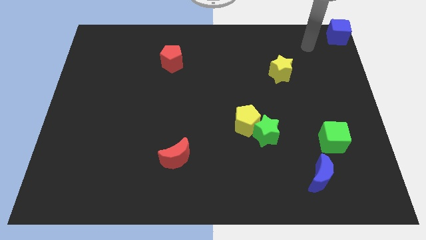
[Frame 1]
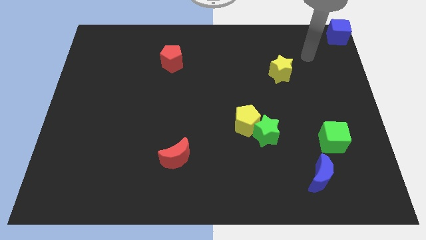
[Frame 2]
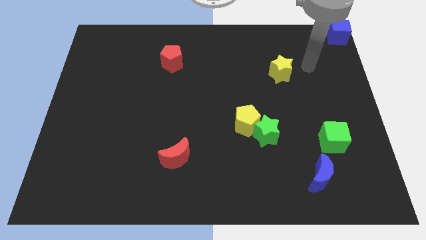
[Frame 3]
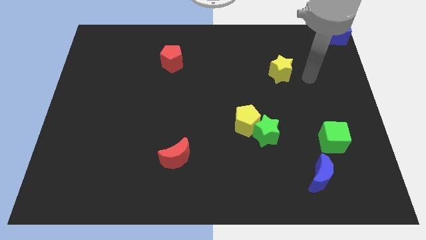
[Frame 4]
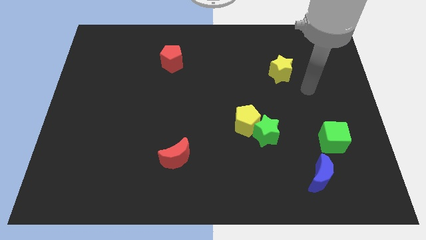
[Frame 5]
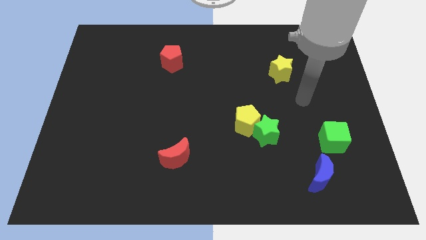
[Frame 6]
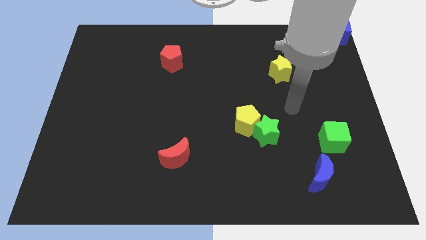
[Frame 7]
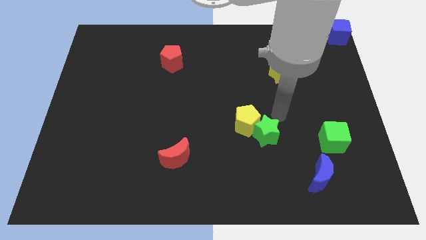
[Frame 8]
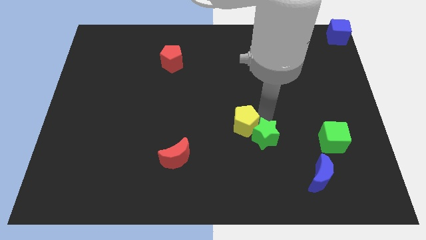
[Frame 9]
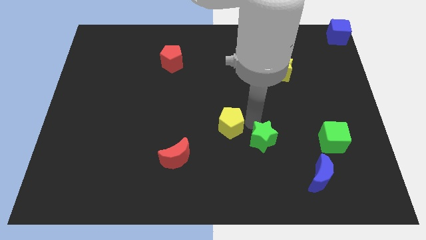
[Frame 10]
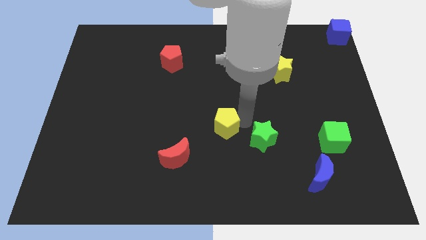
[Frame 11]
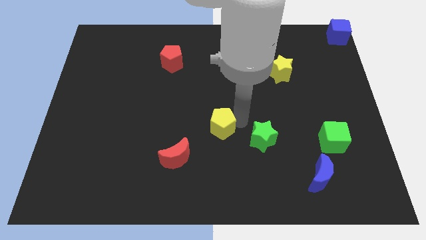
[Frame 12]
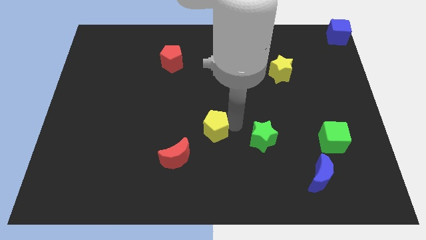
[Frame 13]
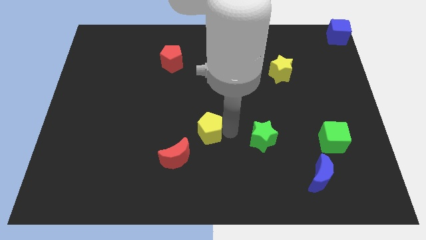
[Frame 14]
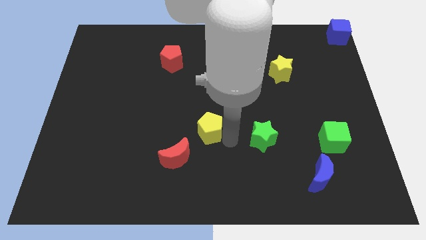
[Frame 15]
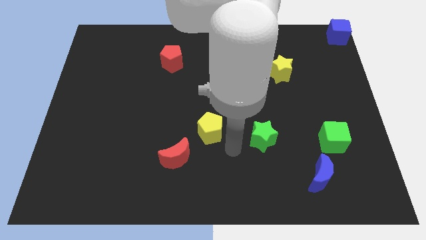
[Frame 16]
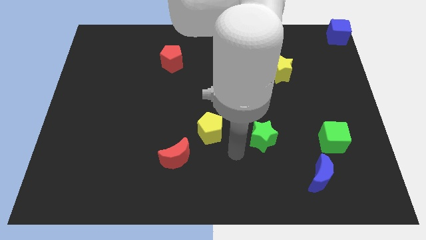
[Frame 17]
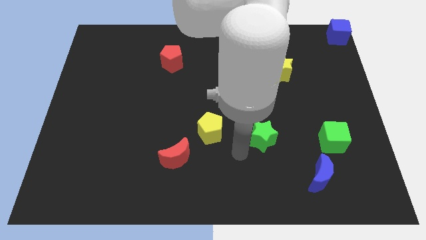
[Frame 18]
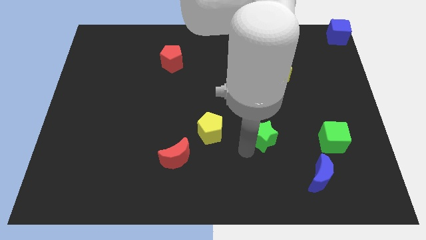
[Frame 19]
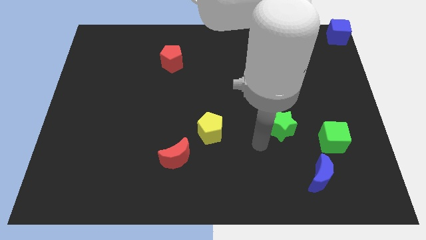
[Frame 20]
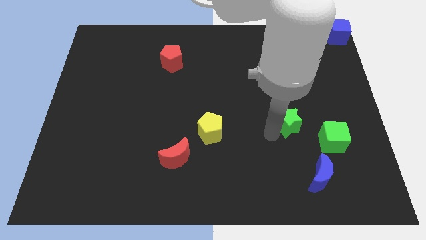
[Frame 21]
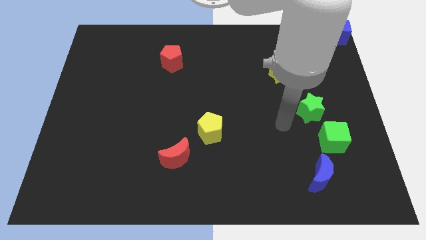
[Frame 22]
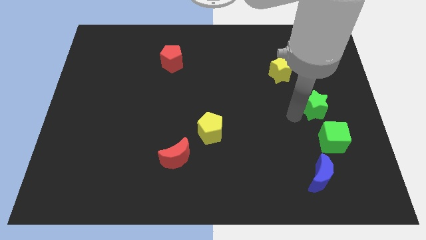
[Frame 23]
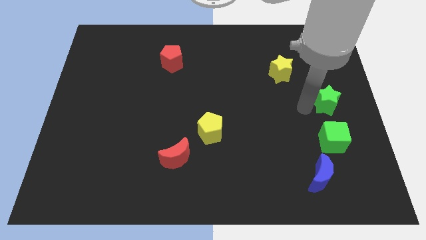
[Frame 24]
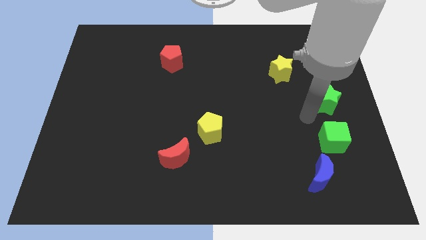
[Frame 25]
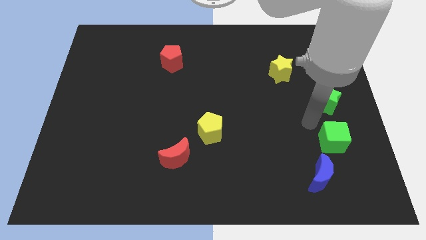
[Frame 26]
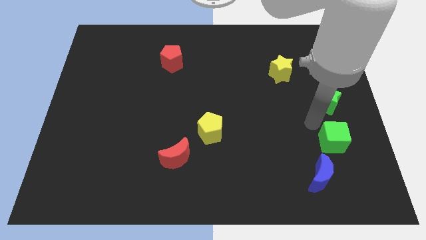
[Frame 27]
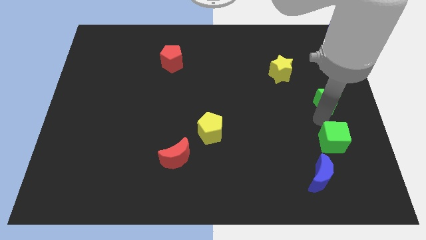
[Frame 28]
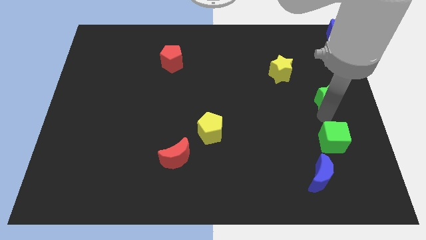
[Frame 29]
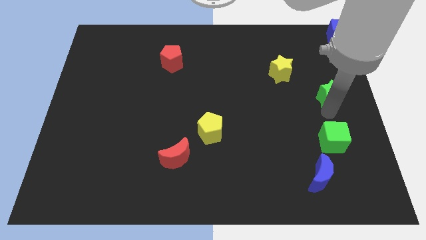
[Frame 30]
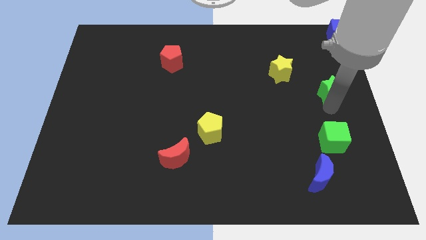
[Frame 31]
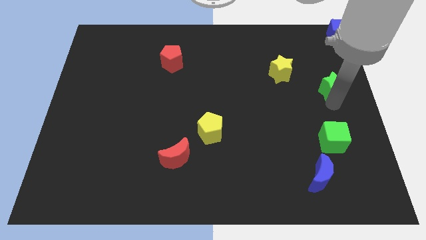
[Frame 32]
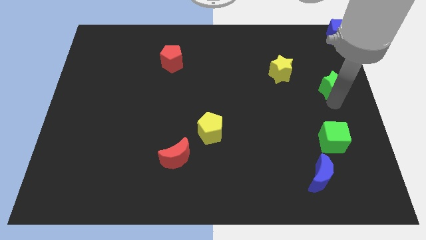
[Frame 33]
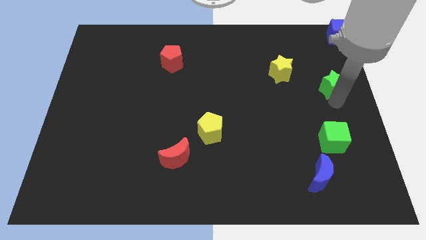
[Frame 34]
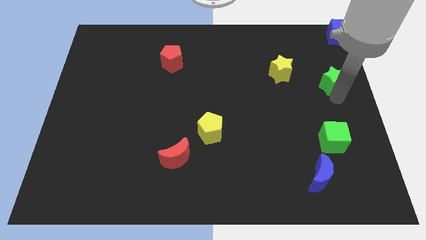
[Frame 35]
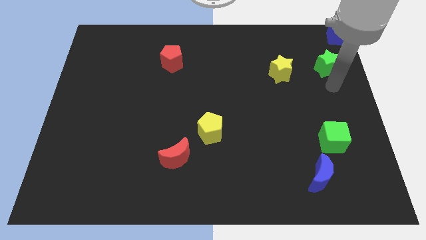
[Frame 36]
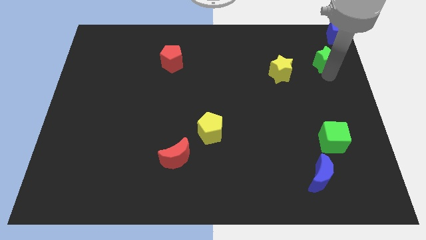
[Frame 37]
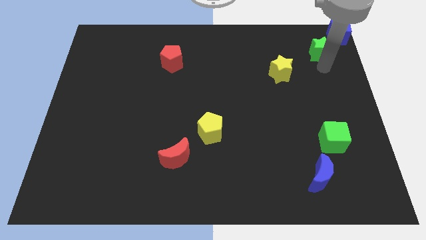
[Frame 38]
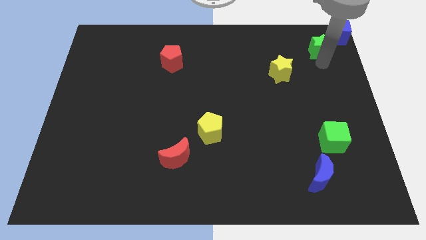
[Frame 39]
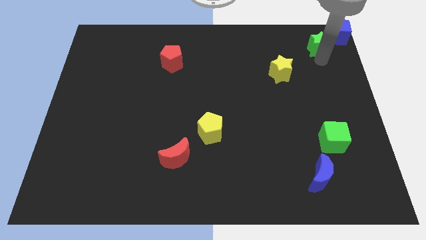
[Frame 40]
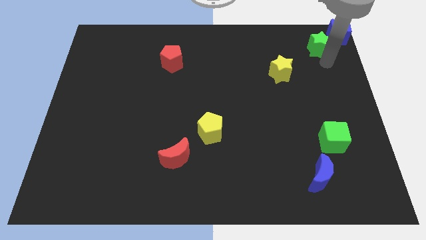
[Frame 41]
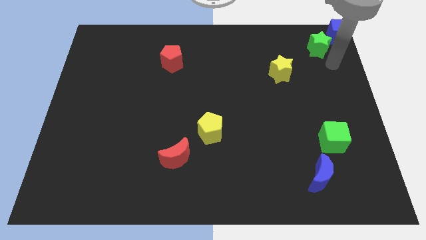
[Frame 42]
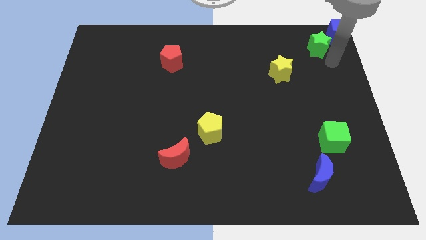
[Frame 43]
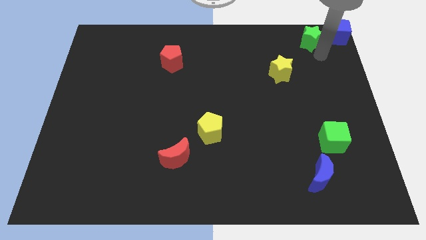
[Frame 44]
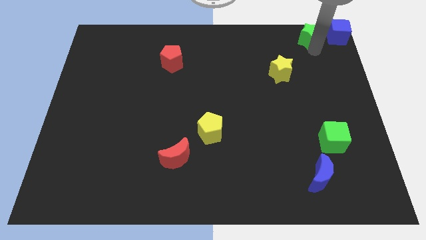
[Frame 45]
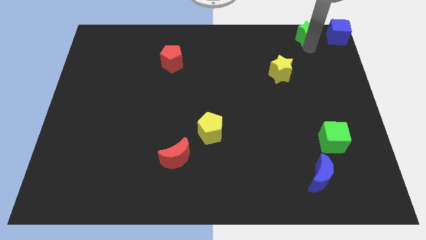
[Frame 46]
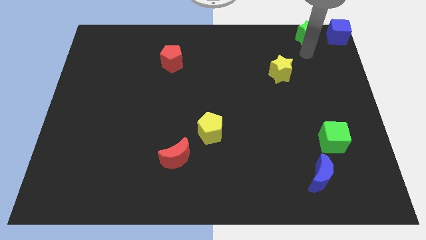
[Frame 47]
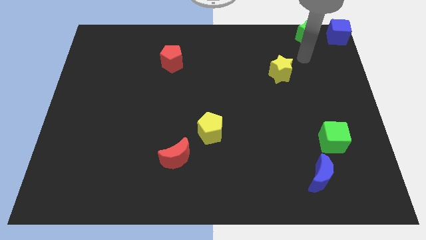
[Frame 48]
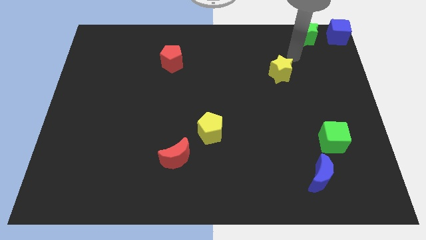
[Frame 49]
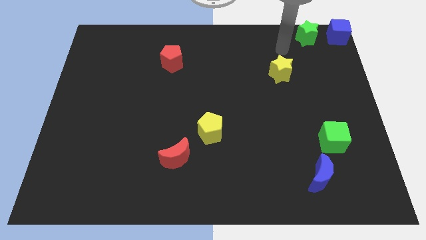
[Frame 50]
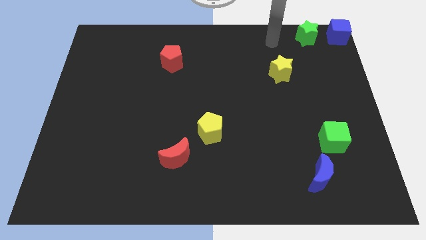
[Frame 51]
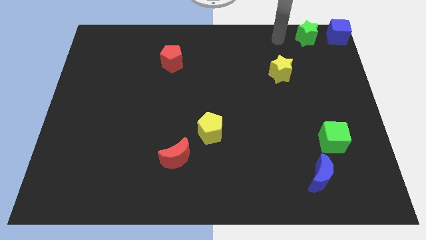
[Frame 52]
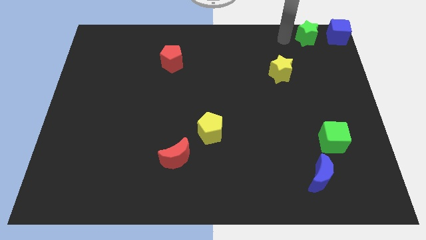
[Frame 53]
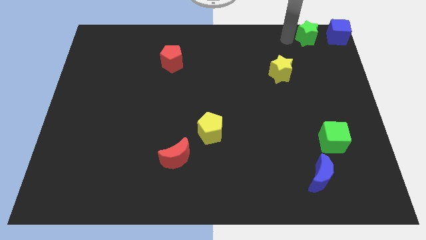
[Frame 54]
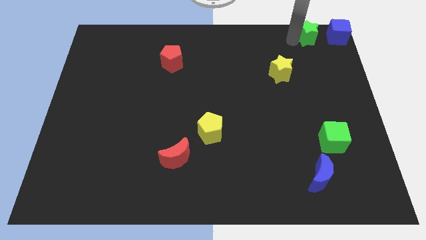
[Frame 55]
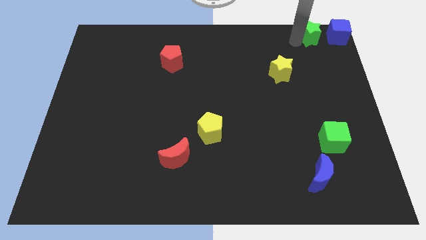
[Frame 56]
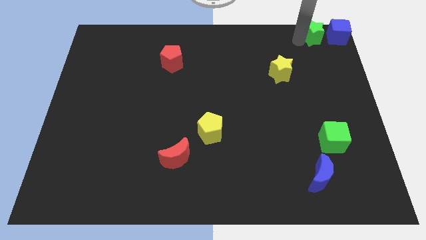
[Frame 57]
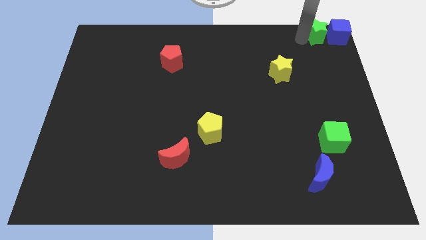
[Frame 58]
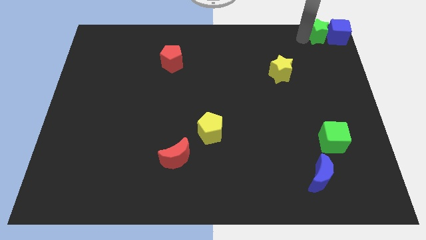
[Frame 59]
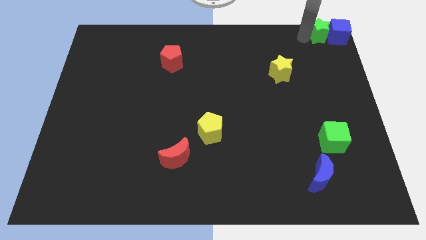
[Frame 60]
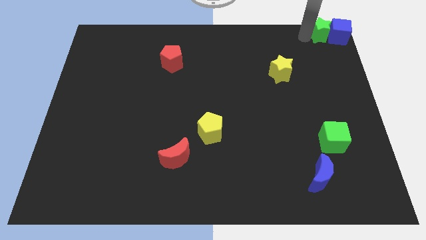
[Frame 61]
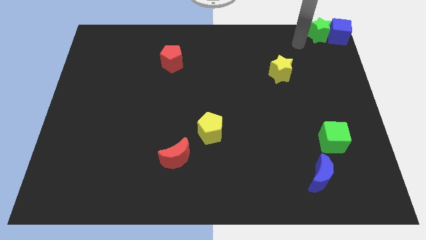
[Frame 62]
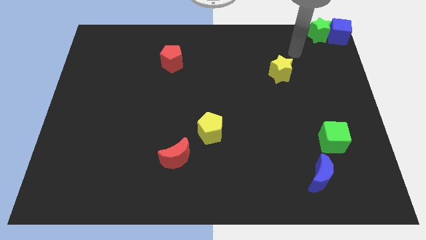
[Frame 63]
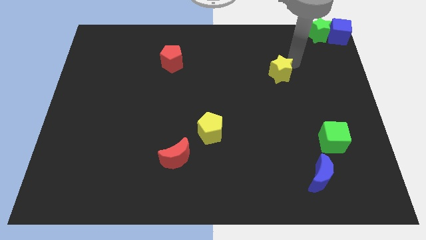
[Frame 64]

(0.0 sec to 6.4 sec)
move green star into blue cube

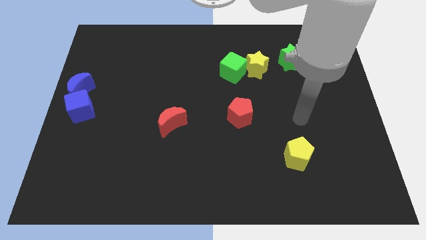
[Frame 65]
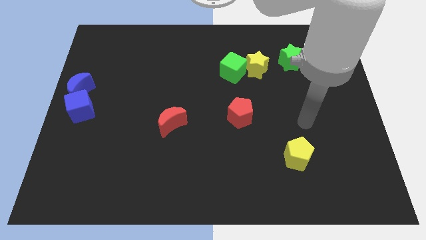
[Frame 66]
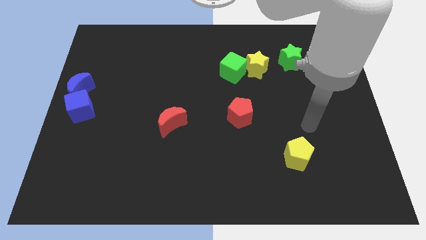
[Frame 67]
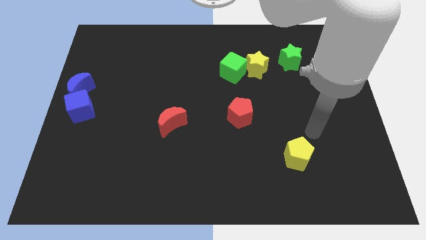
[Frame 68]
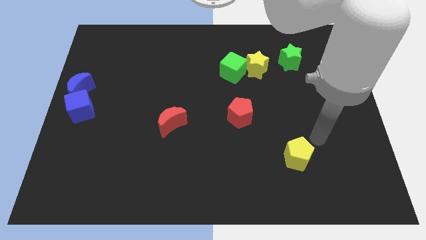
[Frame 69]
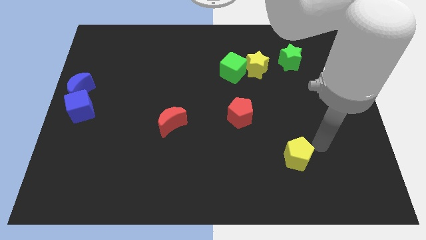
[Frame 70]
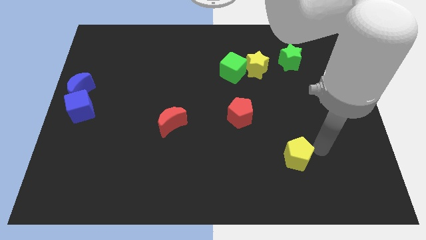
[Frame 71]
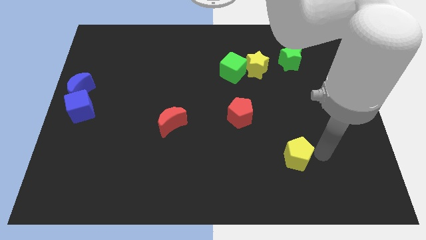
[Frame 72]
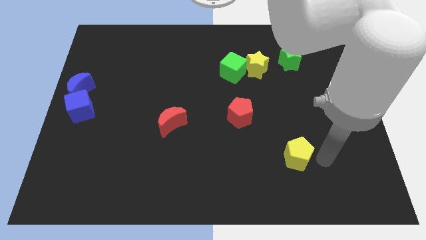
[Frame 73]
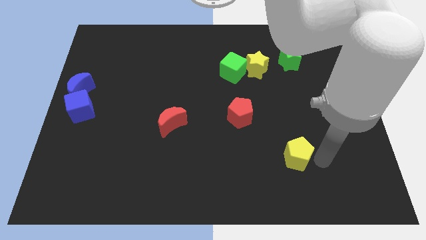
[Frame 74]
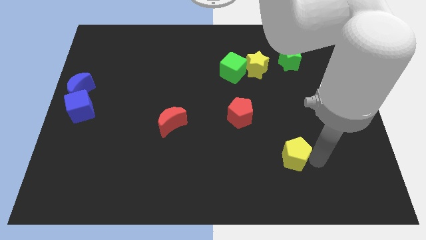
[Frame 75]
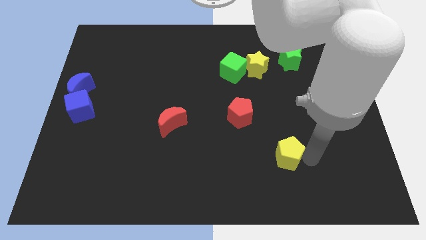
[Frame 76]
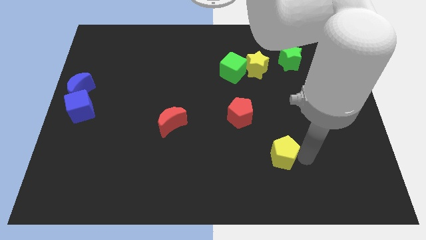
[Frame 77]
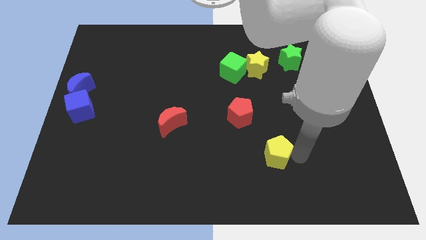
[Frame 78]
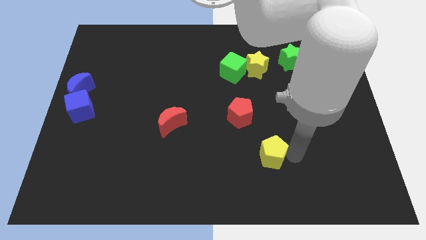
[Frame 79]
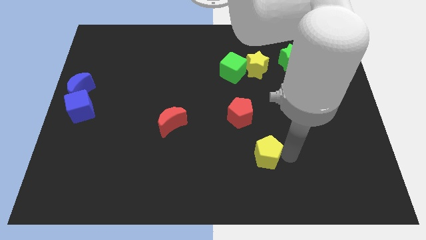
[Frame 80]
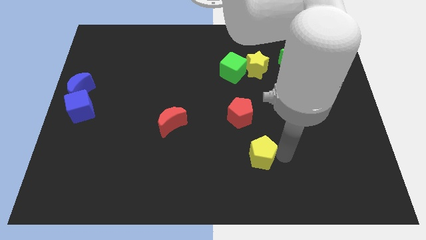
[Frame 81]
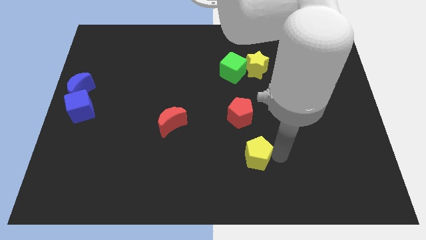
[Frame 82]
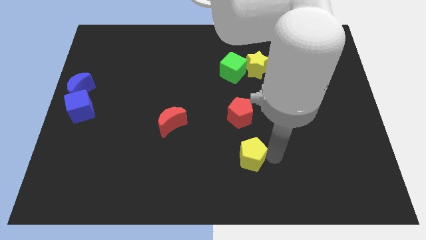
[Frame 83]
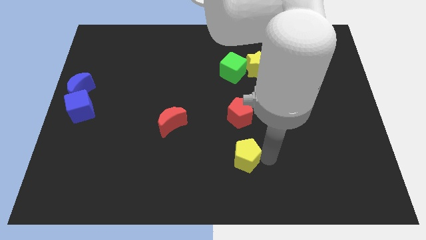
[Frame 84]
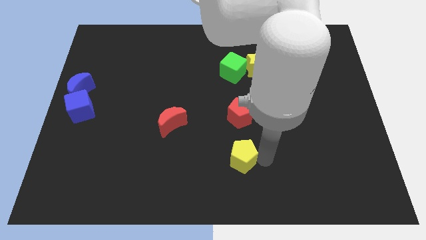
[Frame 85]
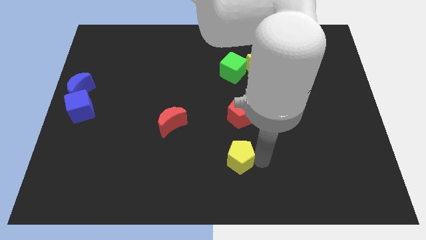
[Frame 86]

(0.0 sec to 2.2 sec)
place the yellow pentagon below the red pentagon

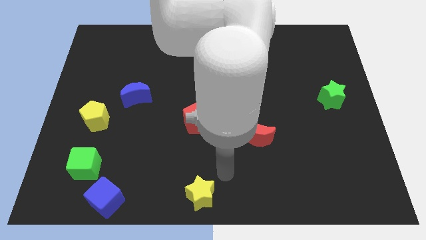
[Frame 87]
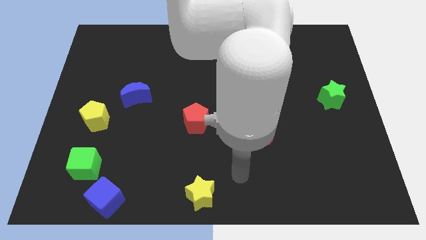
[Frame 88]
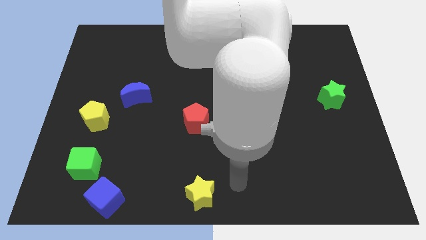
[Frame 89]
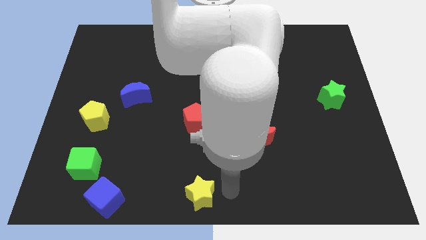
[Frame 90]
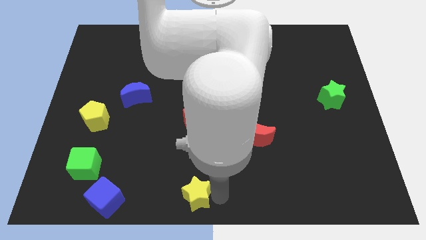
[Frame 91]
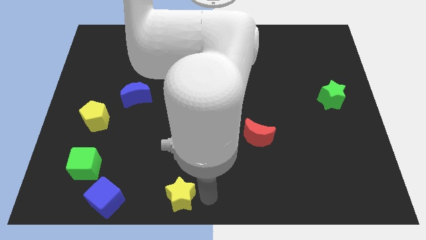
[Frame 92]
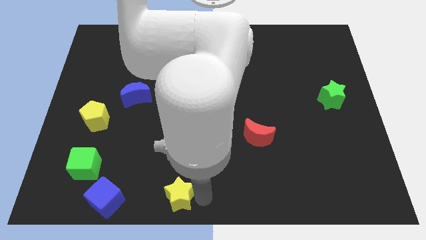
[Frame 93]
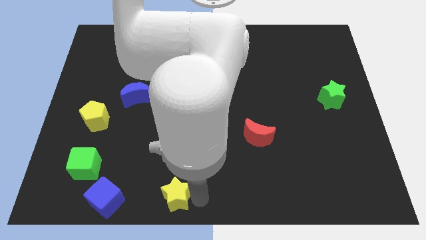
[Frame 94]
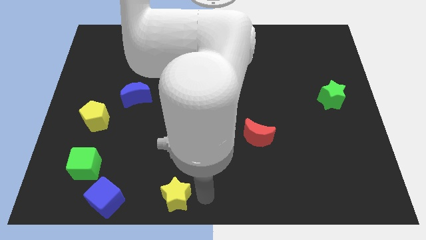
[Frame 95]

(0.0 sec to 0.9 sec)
push the yellow star to the bottom center
